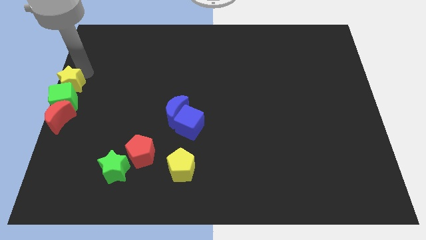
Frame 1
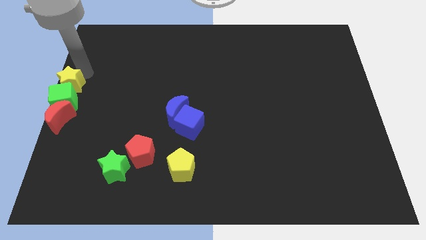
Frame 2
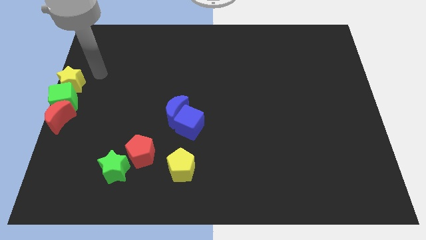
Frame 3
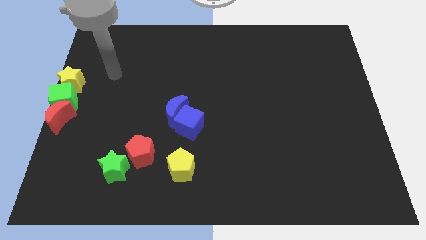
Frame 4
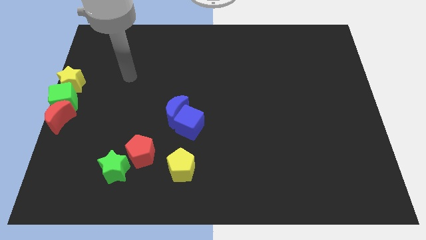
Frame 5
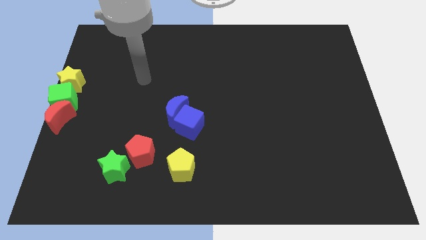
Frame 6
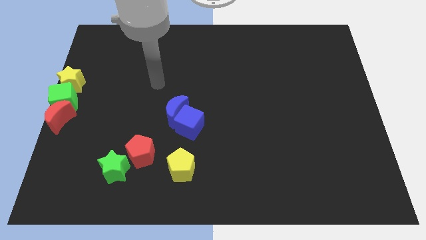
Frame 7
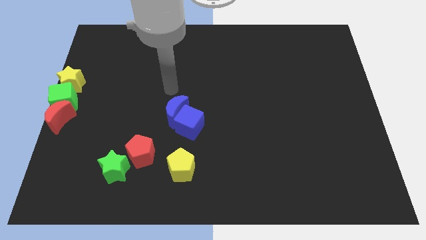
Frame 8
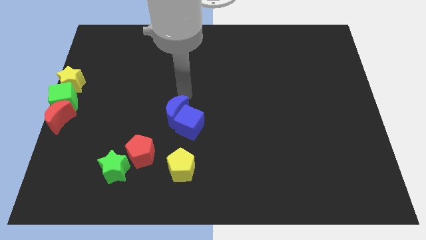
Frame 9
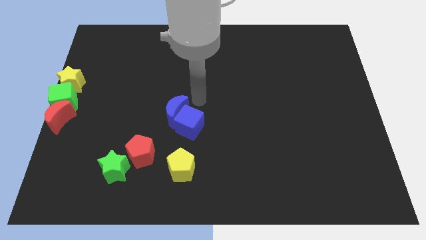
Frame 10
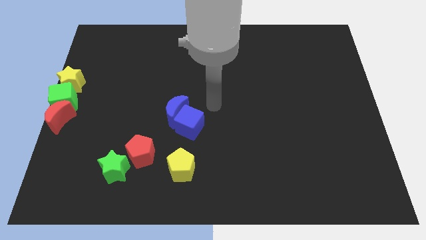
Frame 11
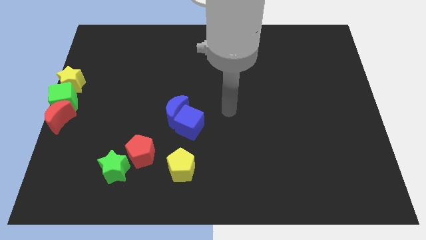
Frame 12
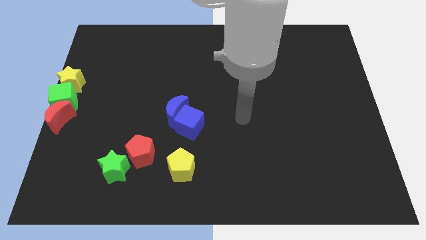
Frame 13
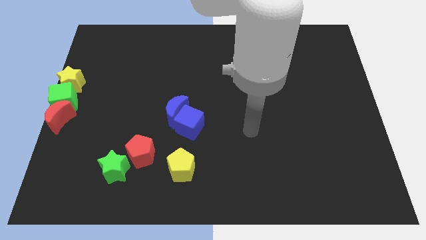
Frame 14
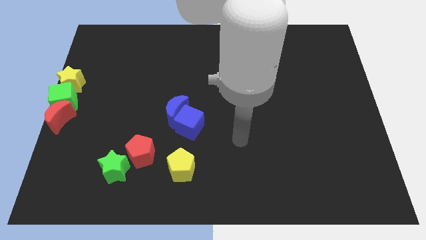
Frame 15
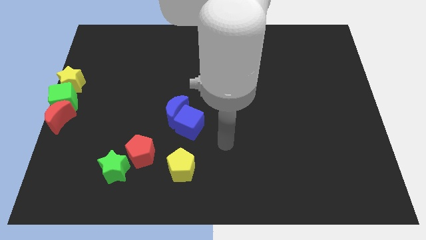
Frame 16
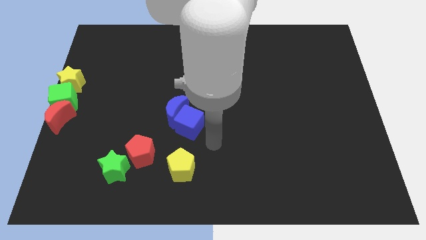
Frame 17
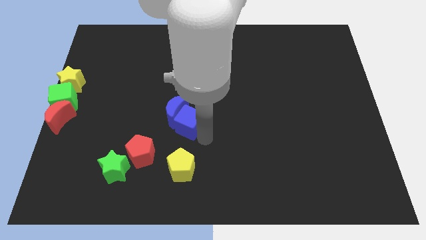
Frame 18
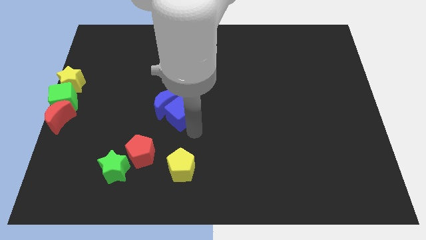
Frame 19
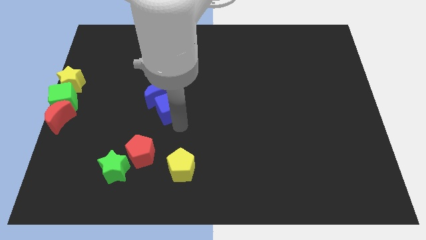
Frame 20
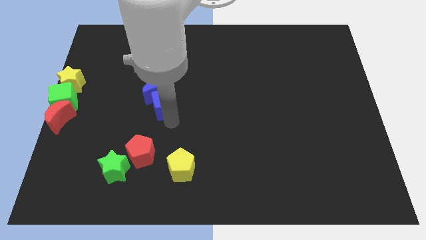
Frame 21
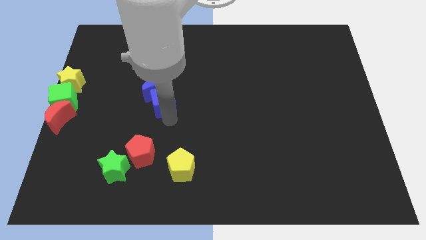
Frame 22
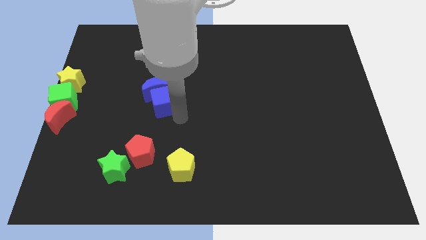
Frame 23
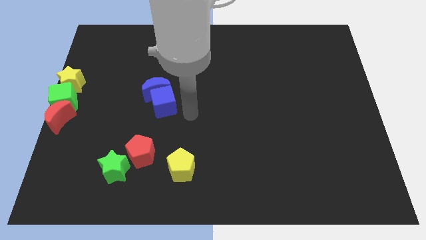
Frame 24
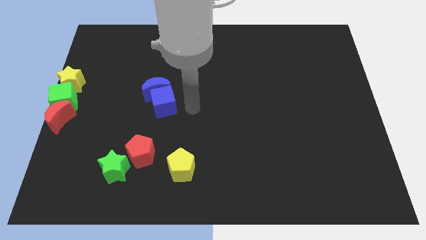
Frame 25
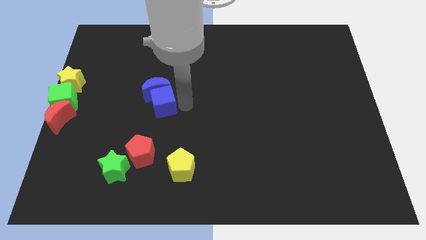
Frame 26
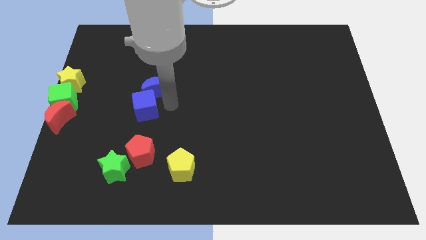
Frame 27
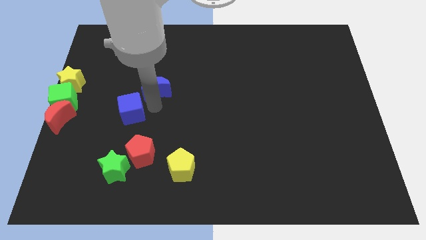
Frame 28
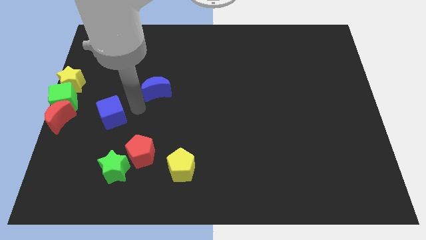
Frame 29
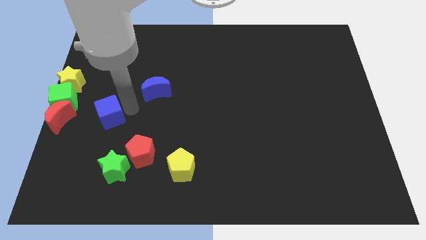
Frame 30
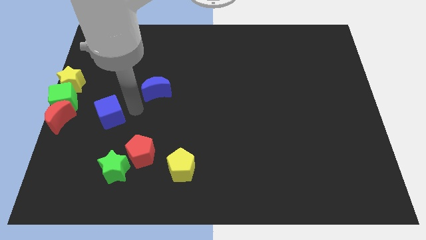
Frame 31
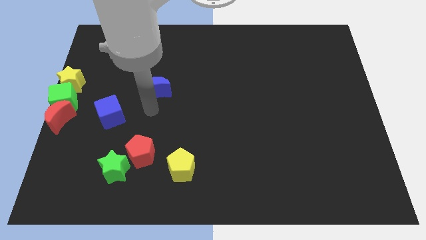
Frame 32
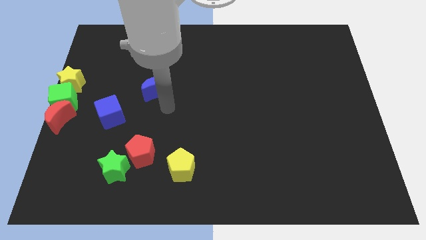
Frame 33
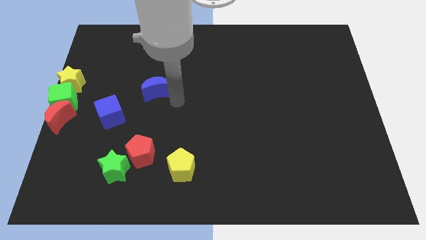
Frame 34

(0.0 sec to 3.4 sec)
separate the blue cube and blue moon

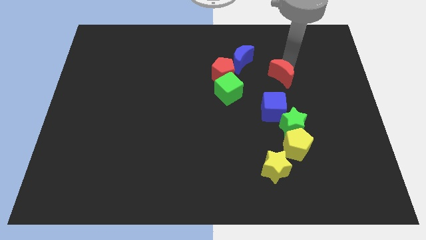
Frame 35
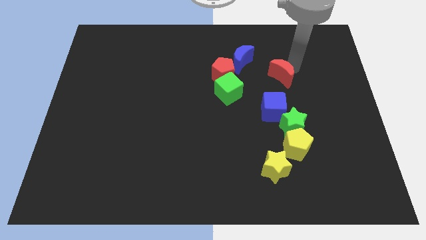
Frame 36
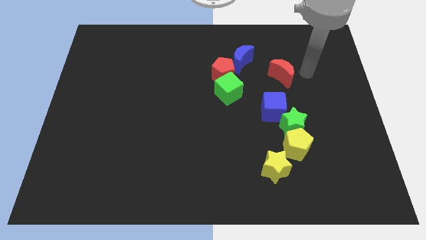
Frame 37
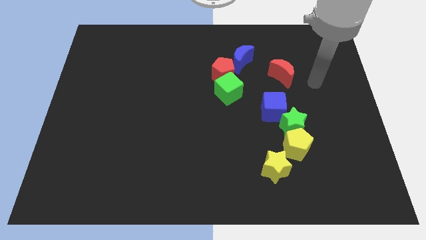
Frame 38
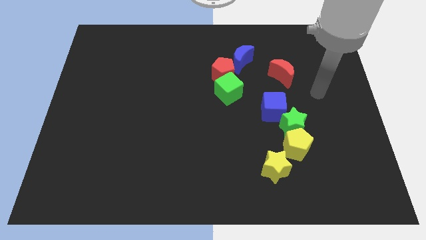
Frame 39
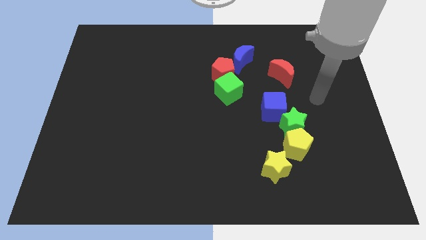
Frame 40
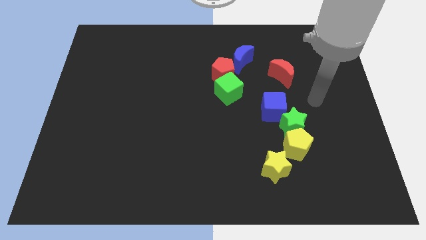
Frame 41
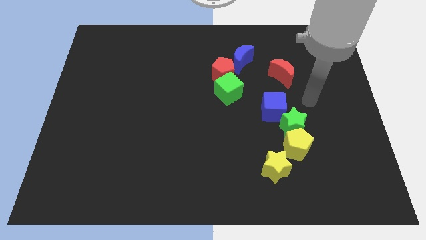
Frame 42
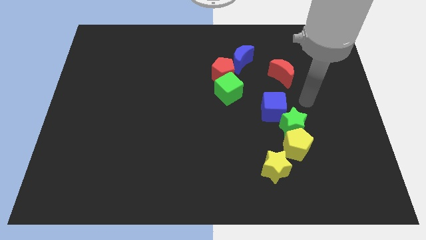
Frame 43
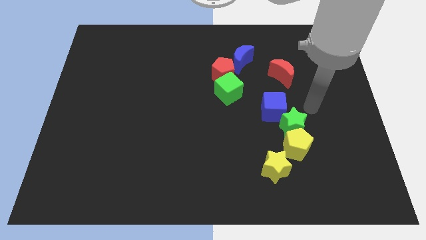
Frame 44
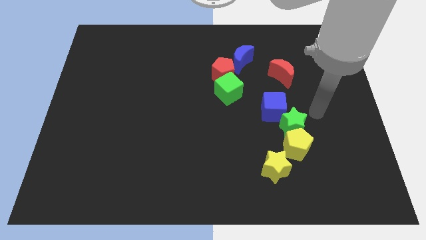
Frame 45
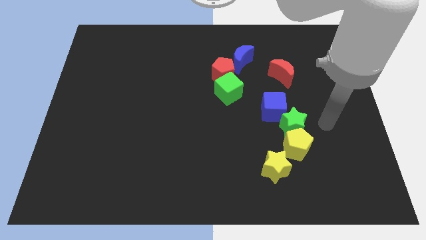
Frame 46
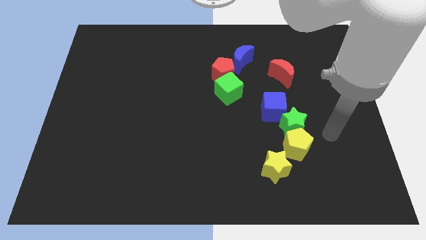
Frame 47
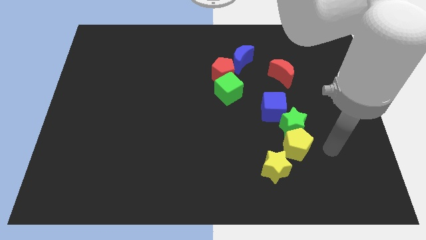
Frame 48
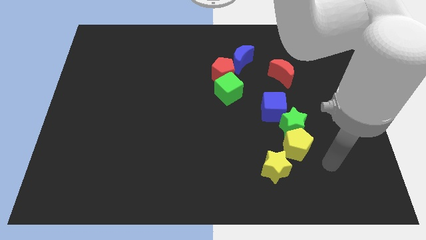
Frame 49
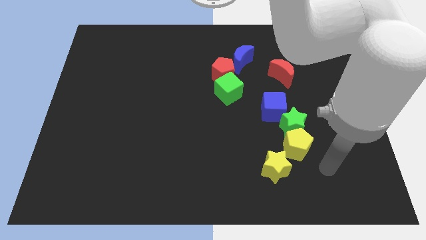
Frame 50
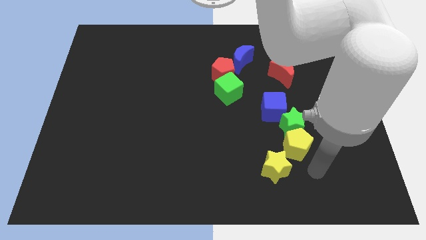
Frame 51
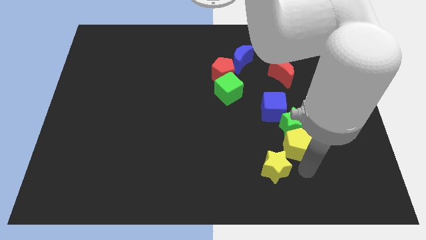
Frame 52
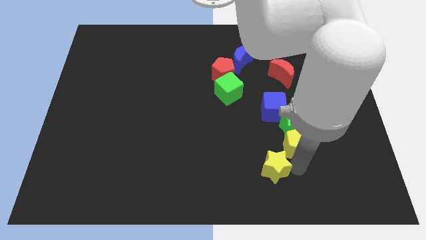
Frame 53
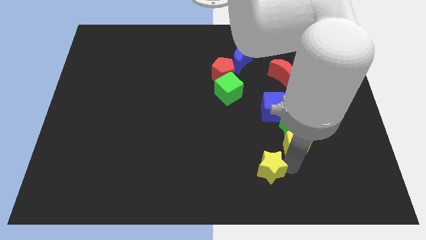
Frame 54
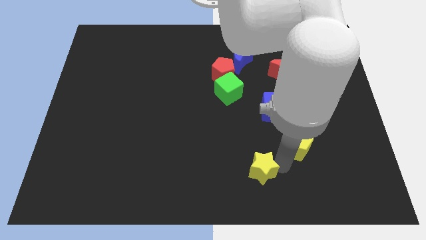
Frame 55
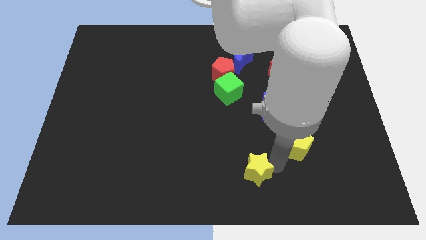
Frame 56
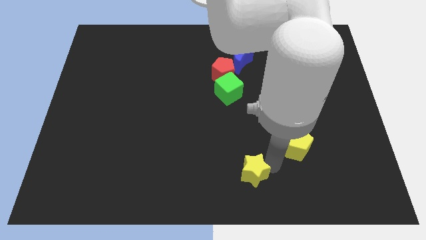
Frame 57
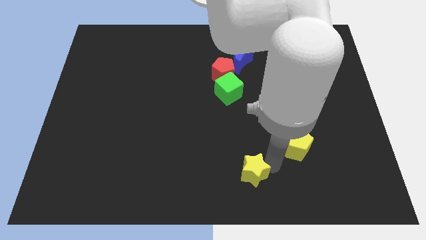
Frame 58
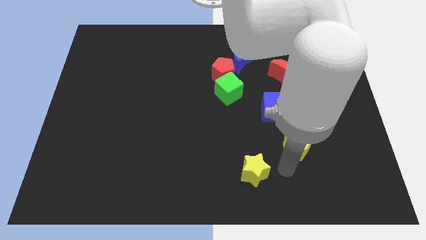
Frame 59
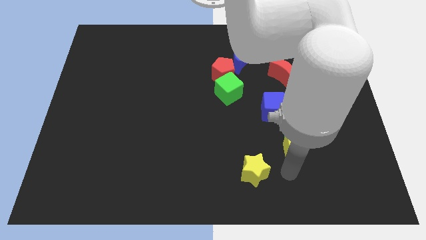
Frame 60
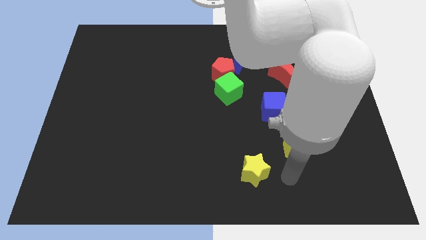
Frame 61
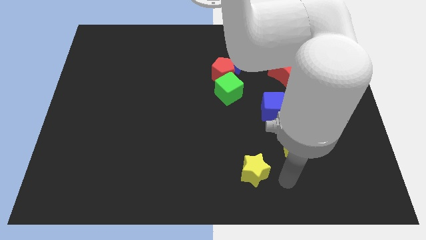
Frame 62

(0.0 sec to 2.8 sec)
push the yellow star slightly away from the yellow pentagon

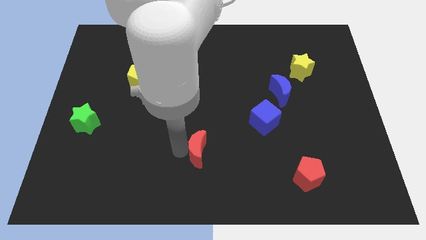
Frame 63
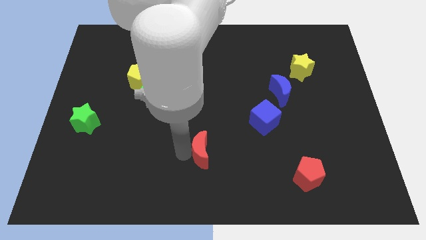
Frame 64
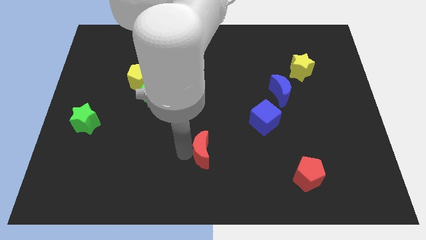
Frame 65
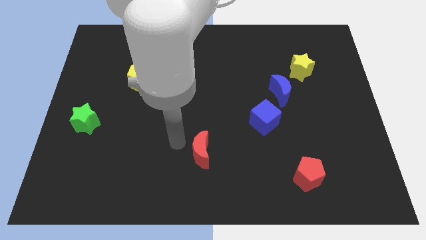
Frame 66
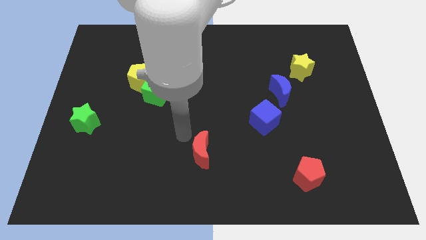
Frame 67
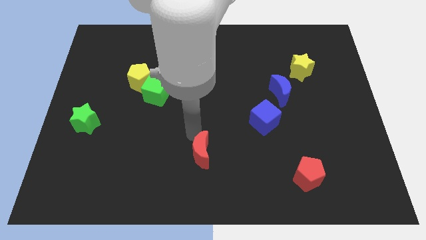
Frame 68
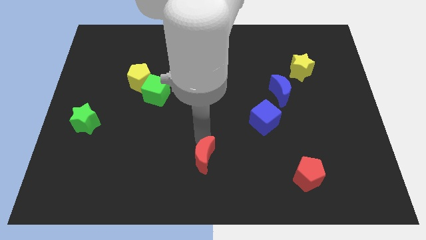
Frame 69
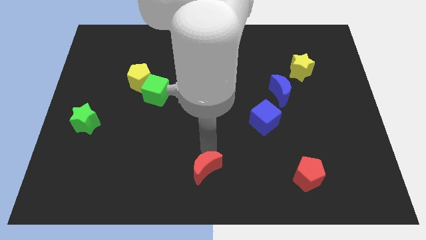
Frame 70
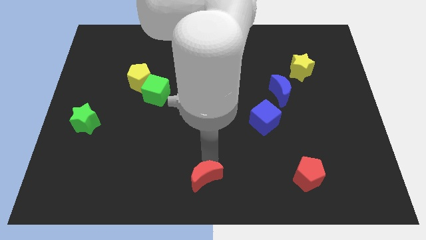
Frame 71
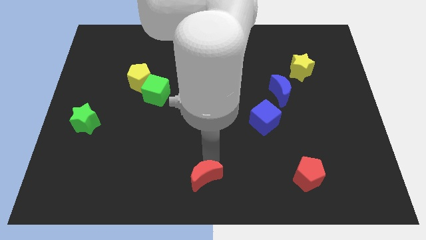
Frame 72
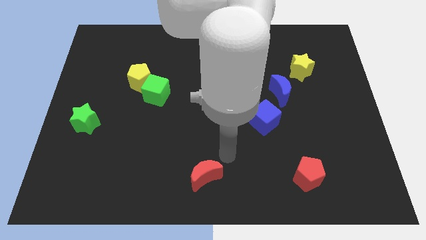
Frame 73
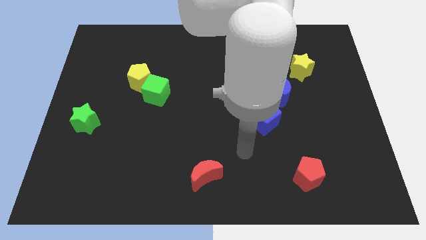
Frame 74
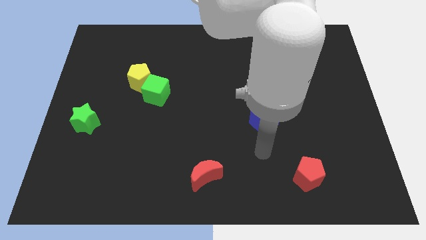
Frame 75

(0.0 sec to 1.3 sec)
place red moon to the bottom center of the board

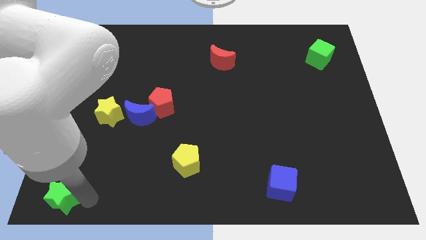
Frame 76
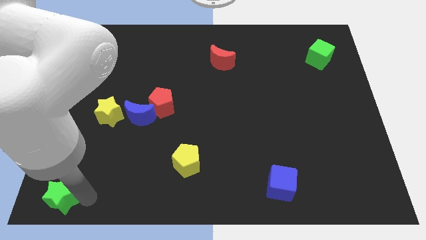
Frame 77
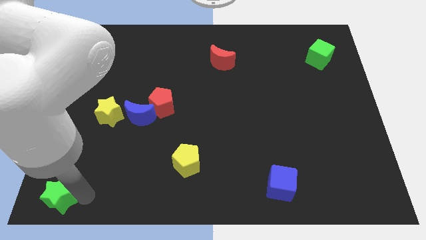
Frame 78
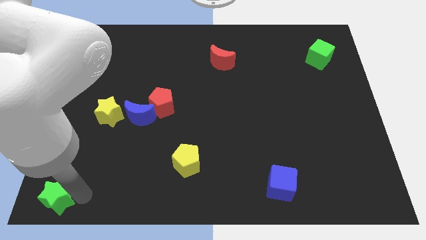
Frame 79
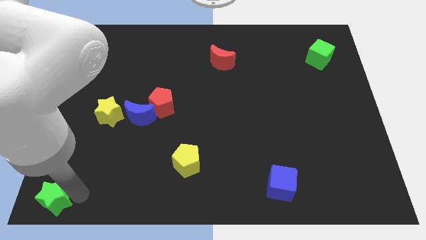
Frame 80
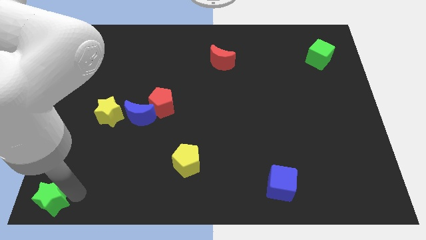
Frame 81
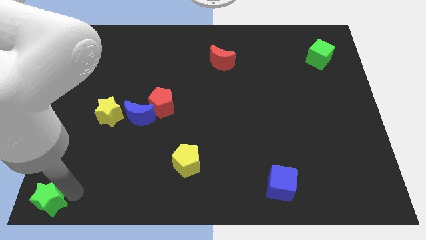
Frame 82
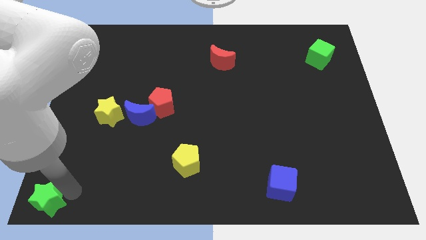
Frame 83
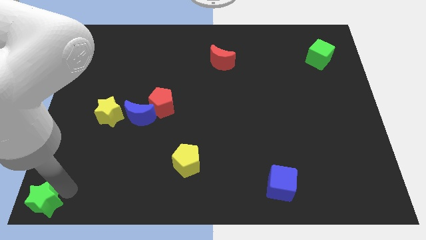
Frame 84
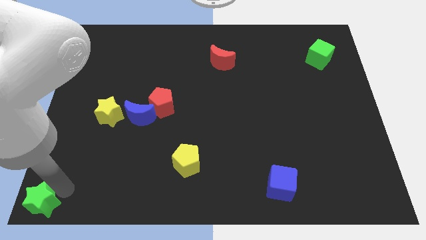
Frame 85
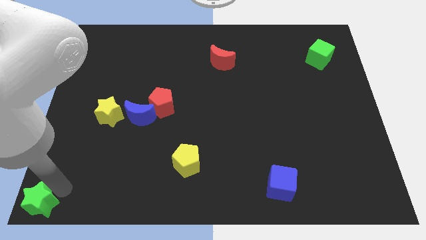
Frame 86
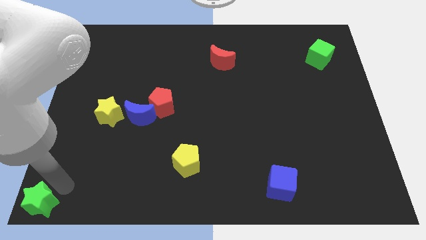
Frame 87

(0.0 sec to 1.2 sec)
move the green star to the bottom left of the board
